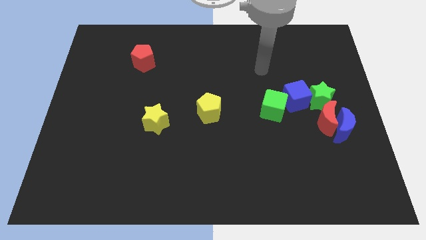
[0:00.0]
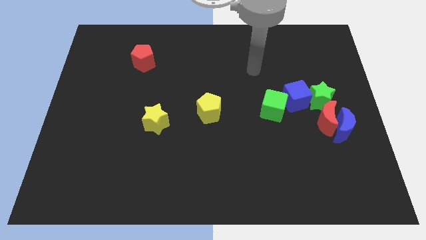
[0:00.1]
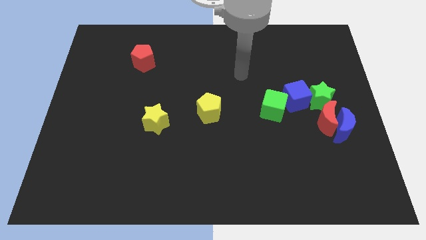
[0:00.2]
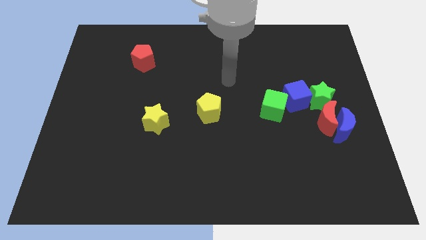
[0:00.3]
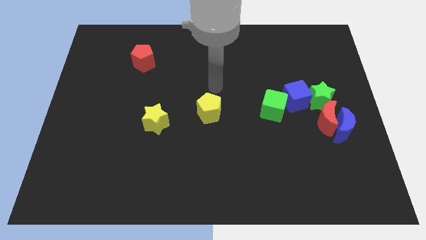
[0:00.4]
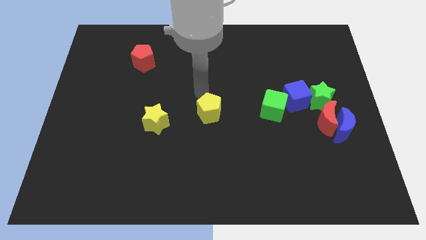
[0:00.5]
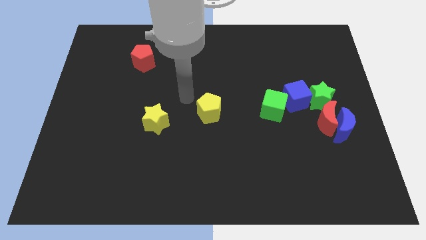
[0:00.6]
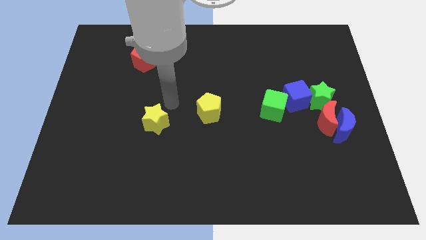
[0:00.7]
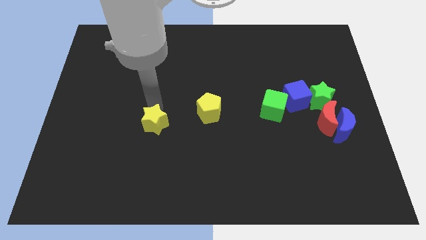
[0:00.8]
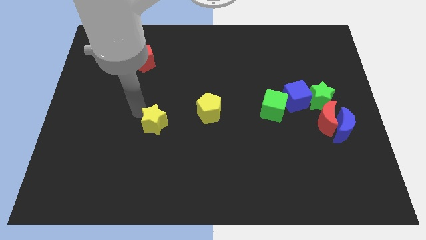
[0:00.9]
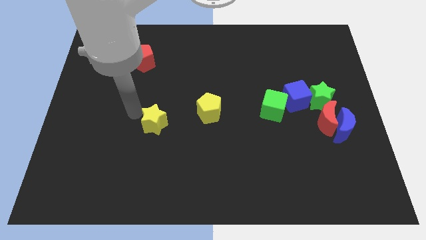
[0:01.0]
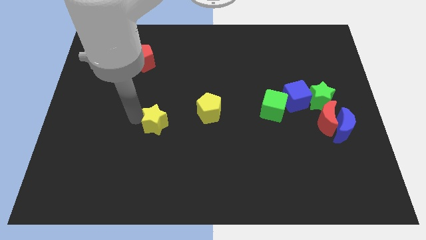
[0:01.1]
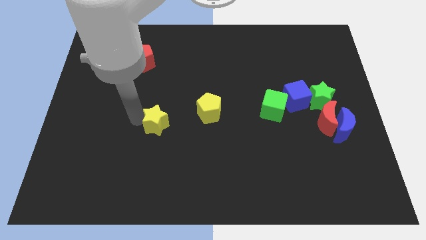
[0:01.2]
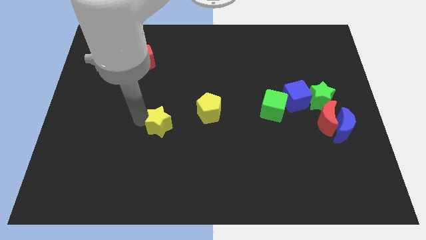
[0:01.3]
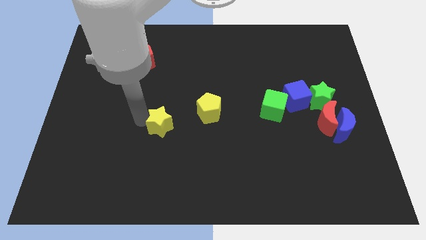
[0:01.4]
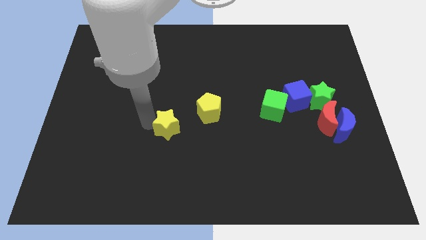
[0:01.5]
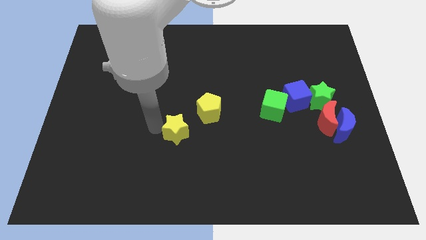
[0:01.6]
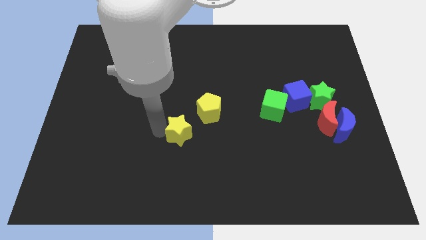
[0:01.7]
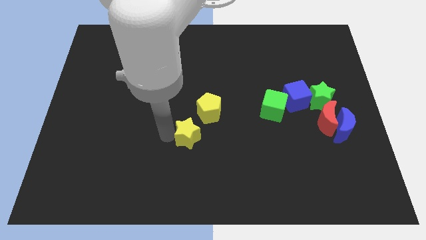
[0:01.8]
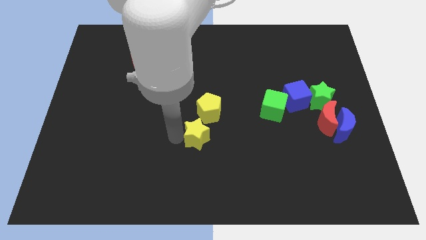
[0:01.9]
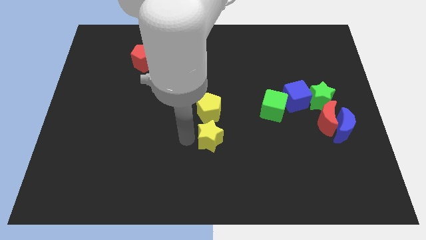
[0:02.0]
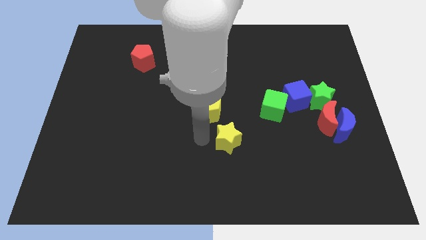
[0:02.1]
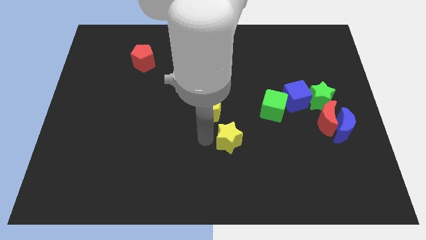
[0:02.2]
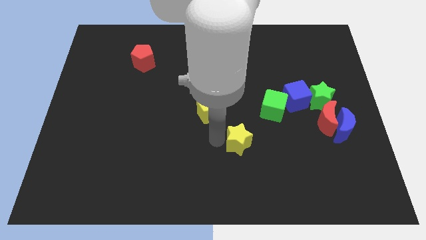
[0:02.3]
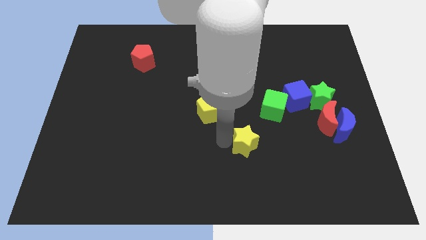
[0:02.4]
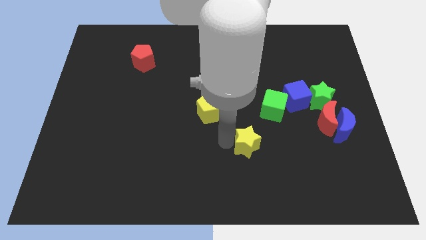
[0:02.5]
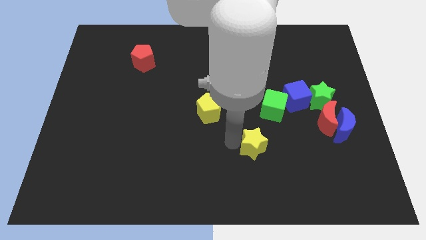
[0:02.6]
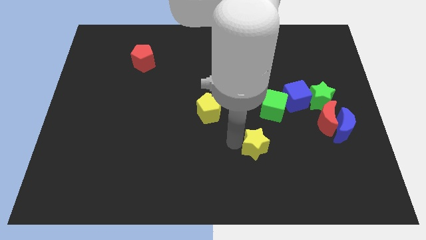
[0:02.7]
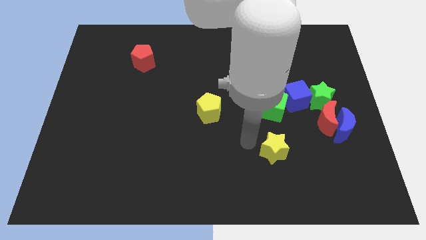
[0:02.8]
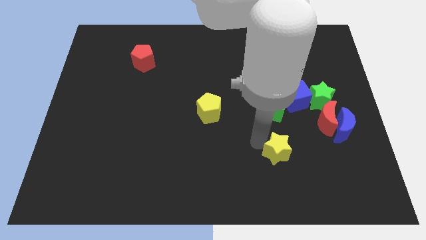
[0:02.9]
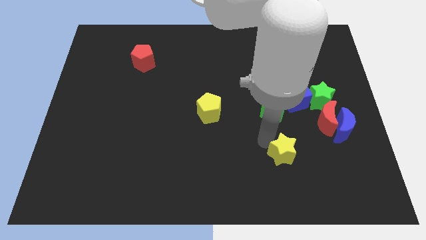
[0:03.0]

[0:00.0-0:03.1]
place yellow star vertical to green cube

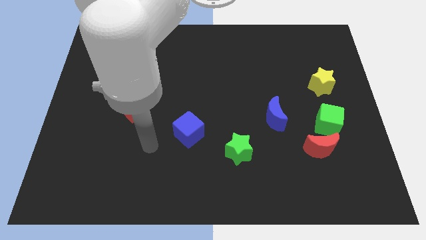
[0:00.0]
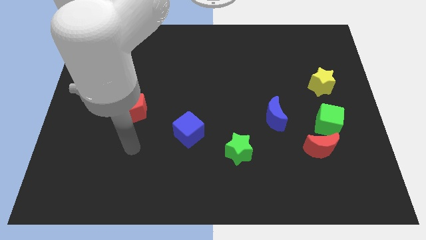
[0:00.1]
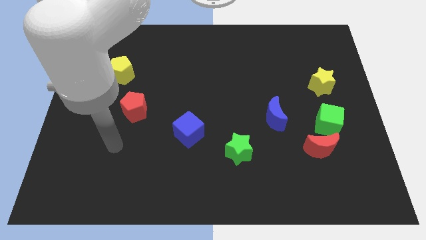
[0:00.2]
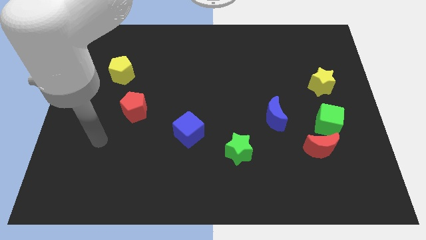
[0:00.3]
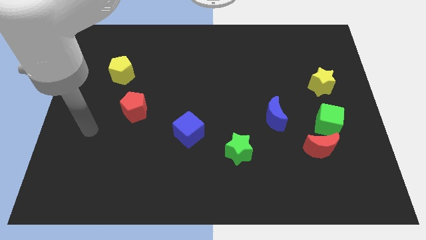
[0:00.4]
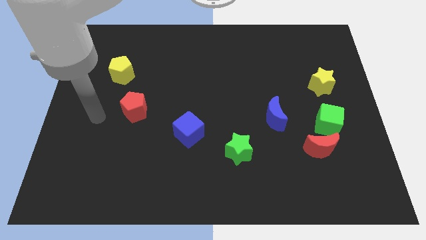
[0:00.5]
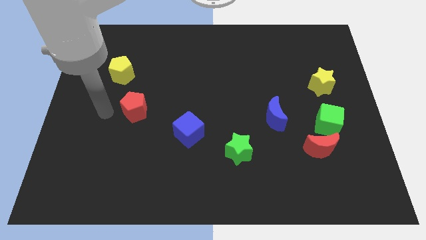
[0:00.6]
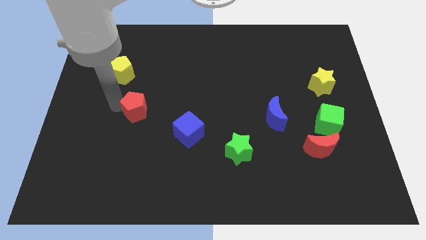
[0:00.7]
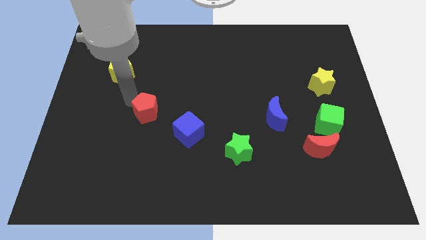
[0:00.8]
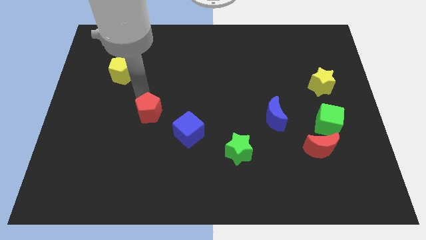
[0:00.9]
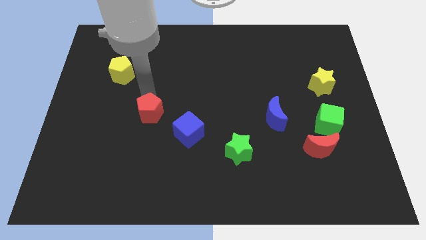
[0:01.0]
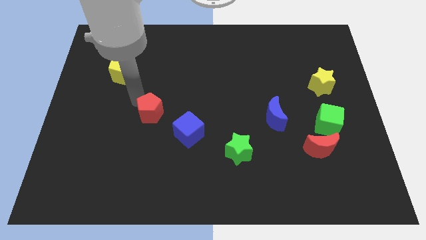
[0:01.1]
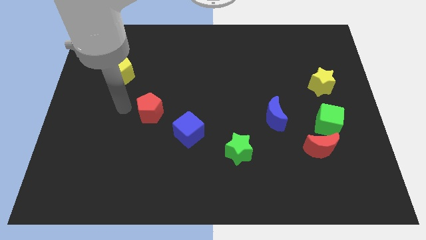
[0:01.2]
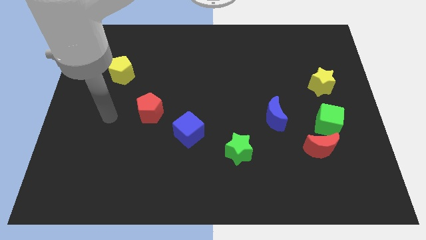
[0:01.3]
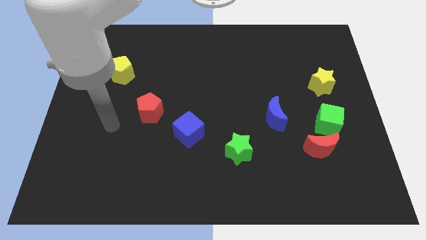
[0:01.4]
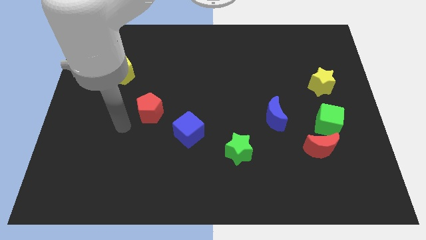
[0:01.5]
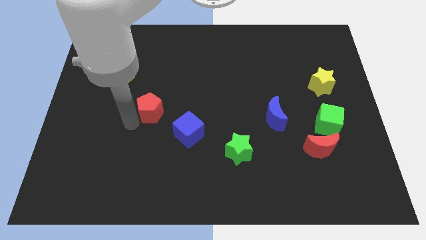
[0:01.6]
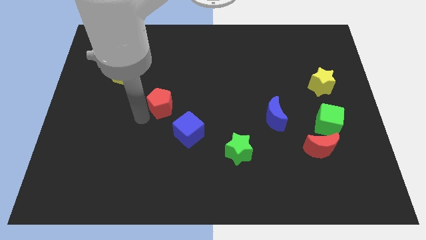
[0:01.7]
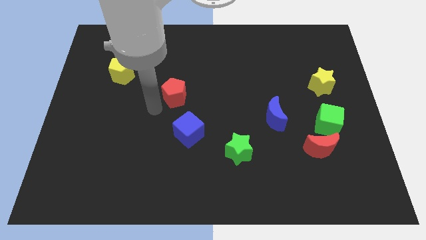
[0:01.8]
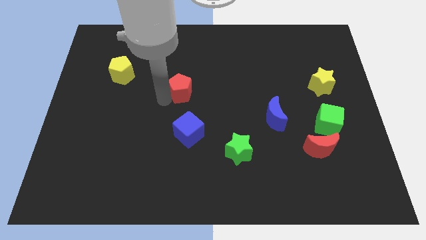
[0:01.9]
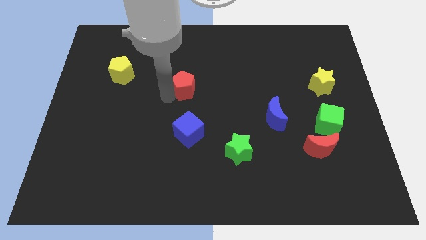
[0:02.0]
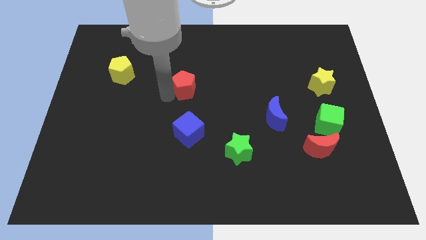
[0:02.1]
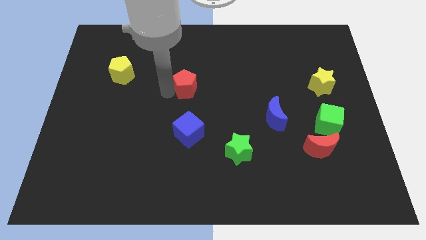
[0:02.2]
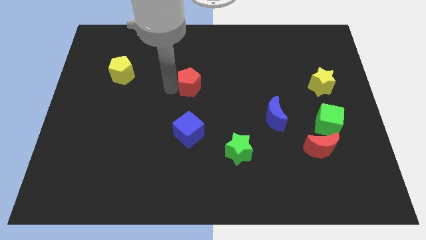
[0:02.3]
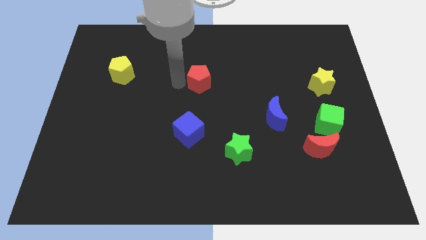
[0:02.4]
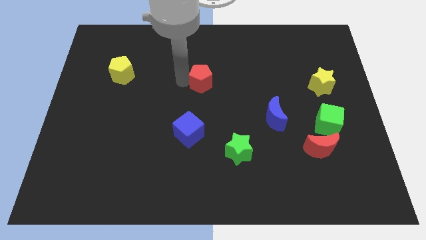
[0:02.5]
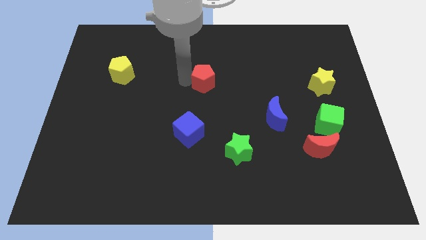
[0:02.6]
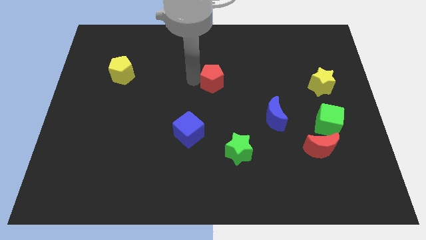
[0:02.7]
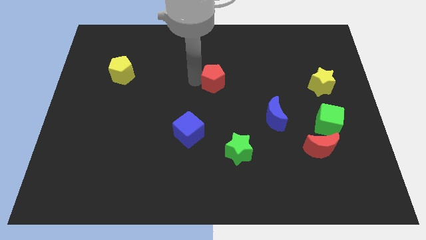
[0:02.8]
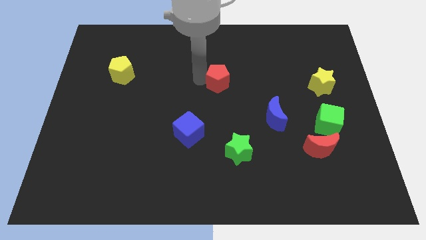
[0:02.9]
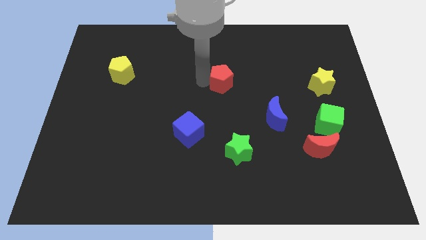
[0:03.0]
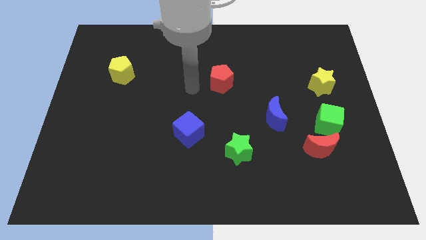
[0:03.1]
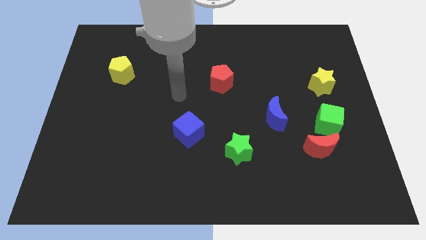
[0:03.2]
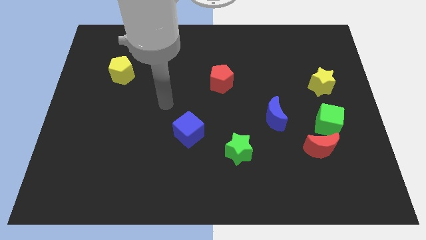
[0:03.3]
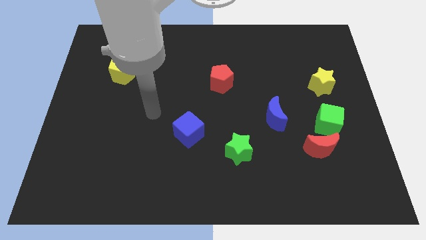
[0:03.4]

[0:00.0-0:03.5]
move the red pentagon right parallel to the yellow pentagon

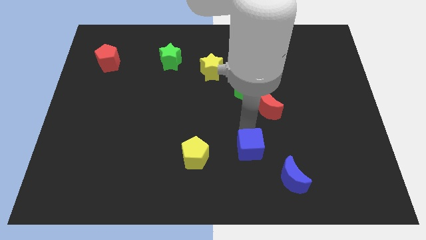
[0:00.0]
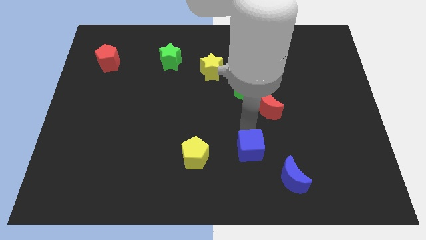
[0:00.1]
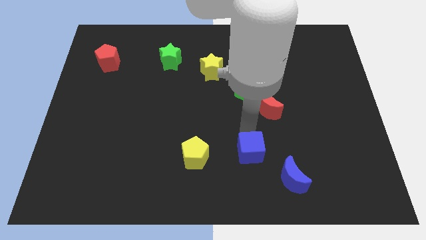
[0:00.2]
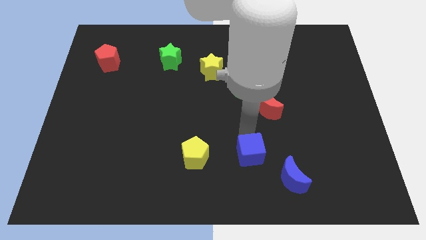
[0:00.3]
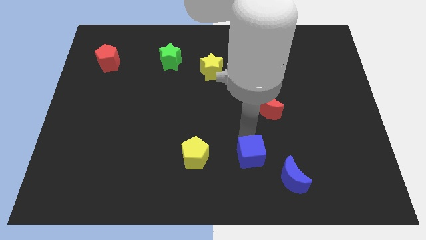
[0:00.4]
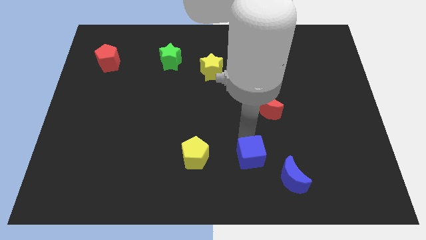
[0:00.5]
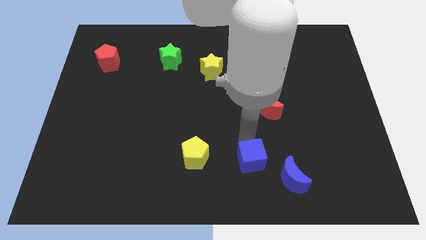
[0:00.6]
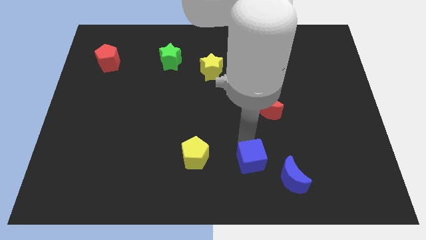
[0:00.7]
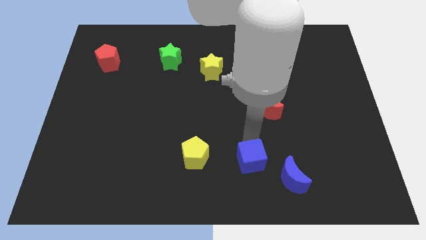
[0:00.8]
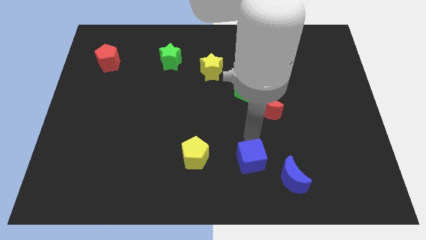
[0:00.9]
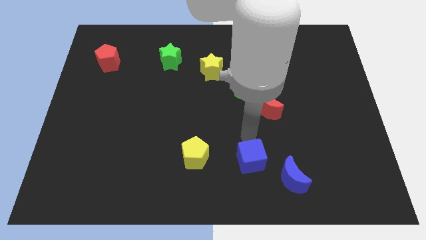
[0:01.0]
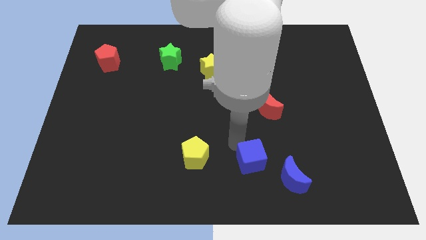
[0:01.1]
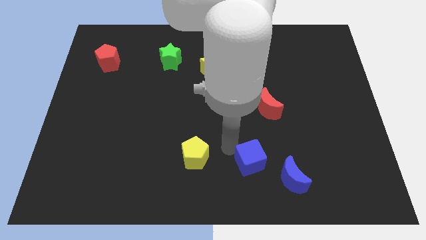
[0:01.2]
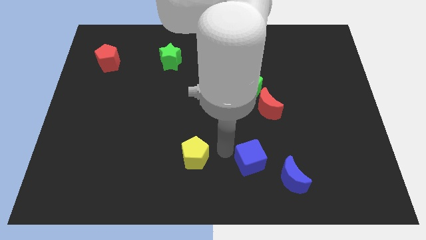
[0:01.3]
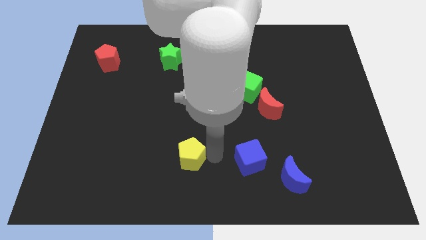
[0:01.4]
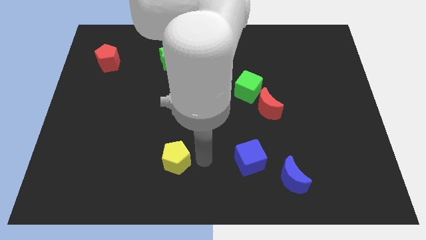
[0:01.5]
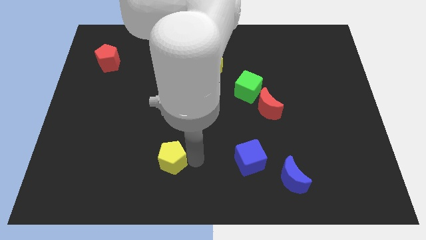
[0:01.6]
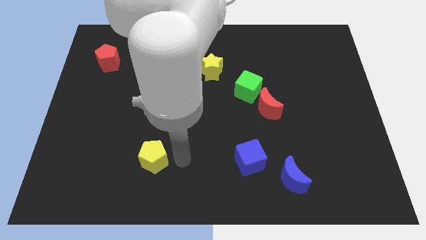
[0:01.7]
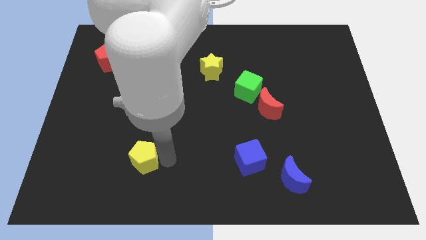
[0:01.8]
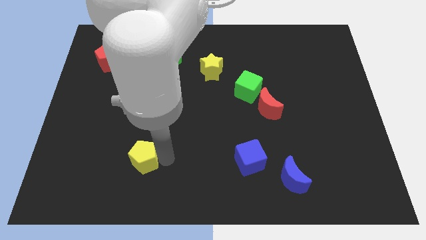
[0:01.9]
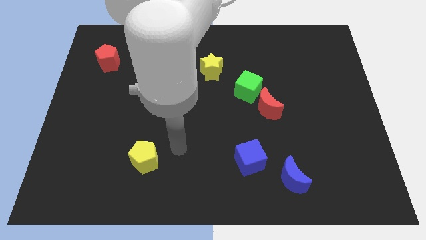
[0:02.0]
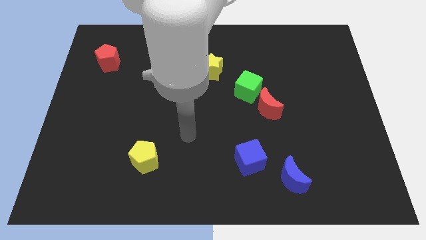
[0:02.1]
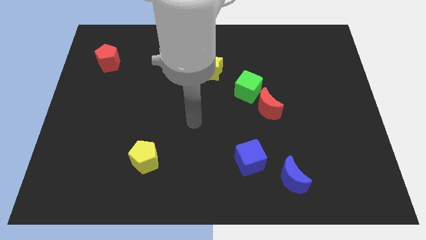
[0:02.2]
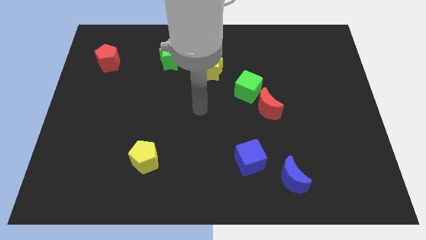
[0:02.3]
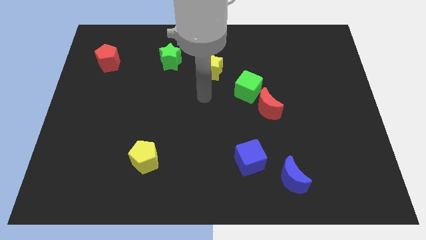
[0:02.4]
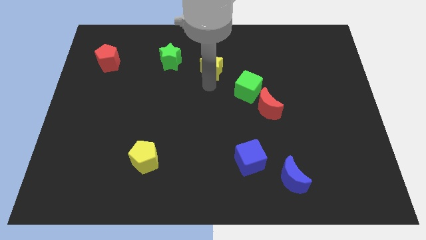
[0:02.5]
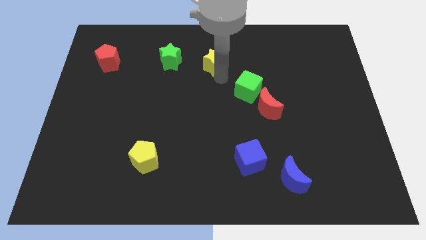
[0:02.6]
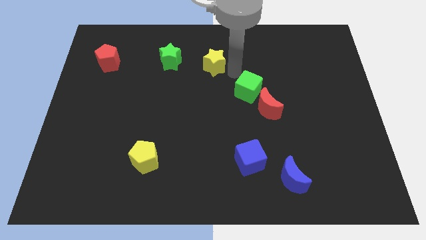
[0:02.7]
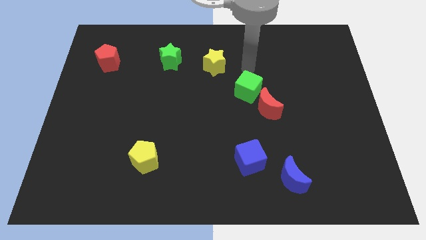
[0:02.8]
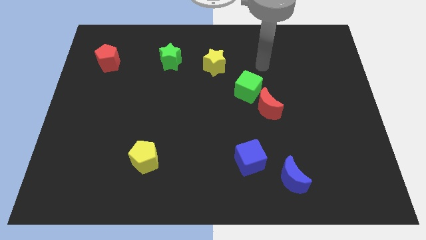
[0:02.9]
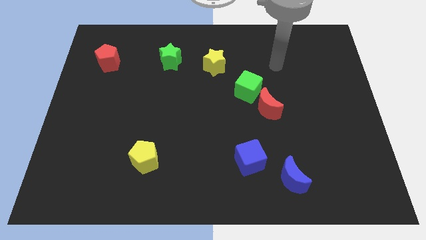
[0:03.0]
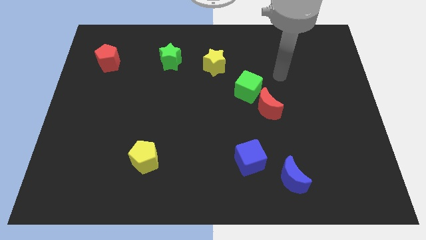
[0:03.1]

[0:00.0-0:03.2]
separate the yellow pentagon from the blue cube
